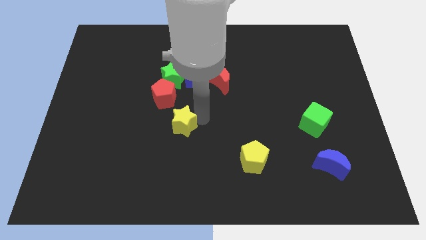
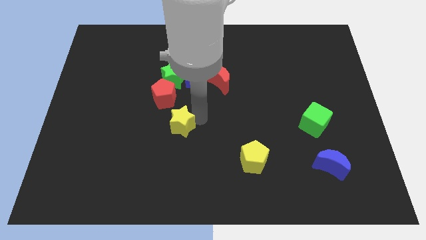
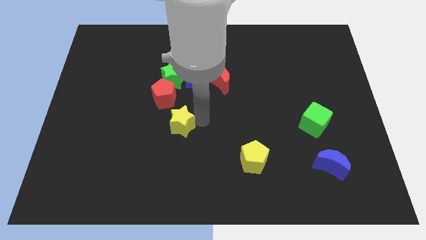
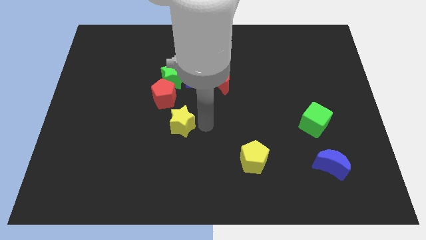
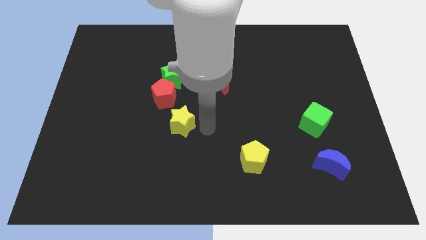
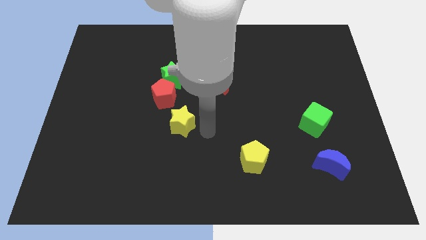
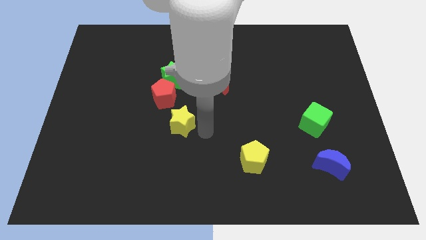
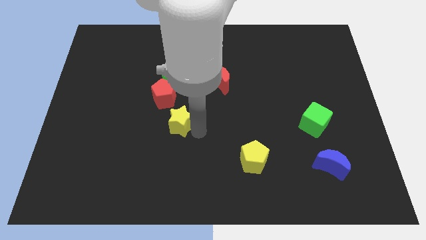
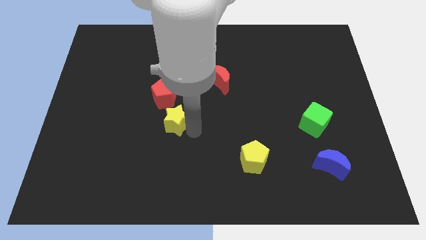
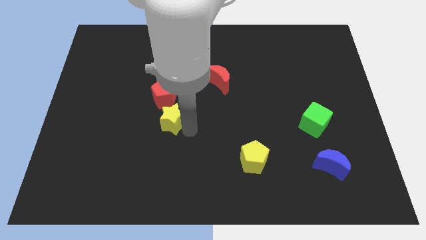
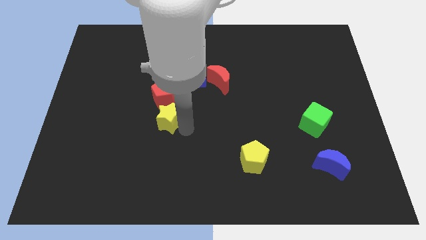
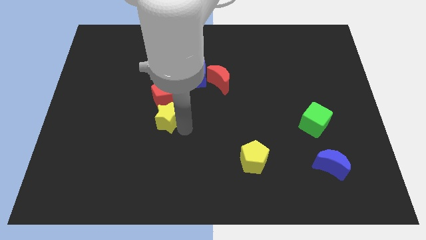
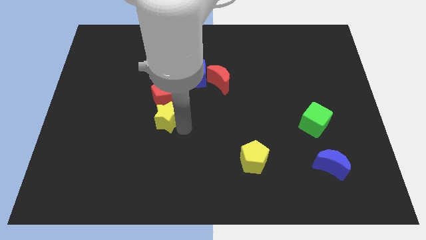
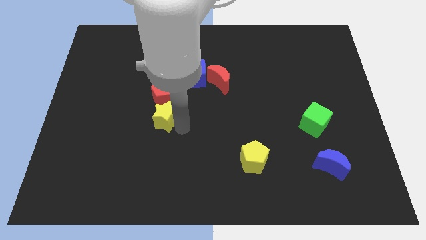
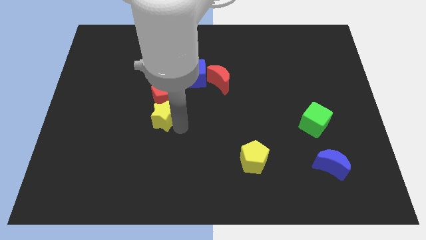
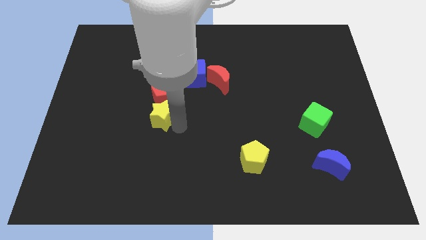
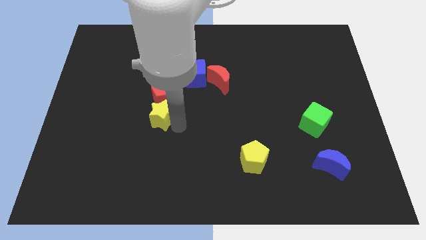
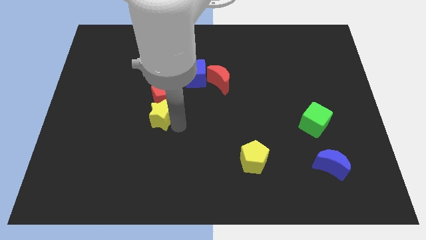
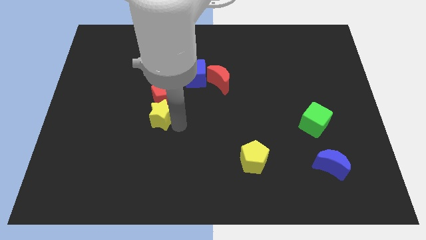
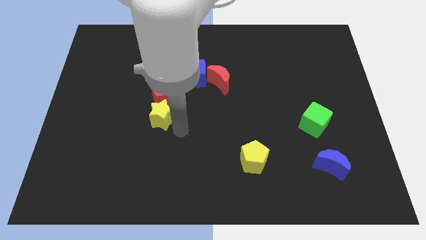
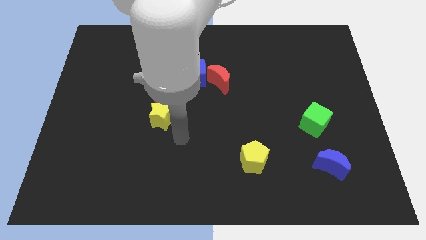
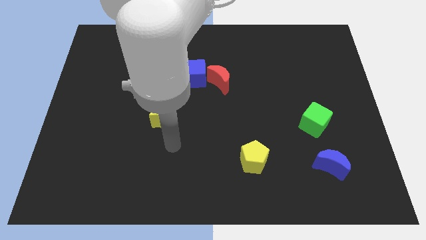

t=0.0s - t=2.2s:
move the yellow star below to the red pentagon

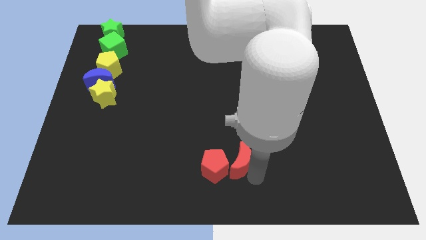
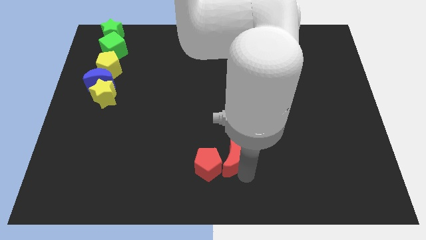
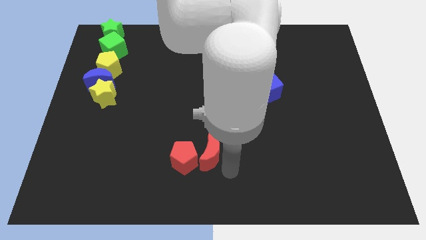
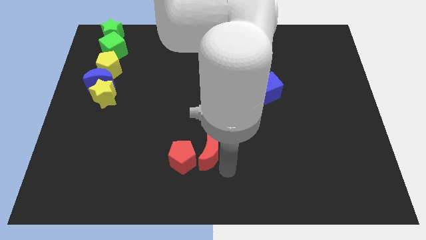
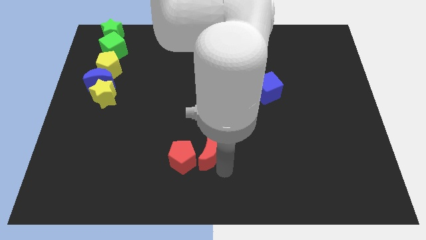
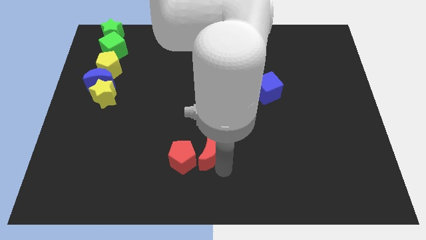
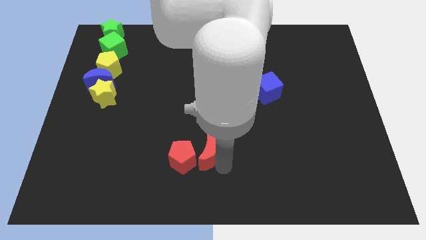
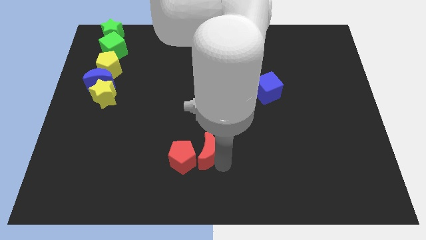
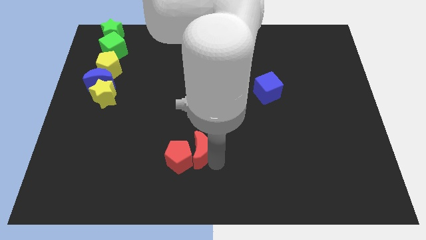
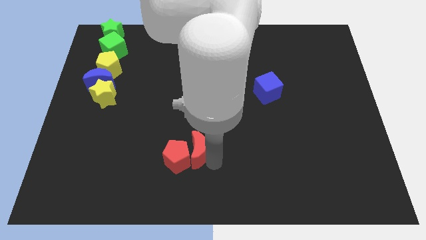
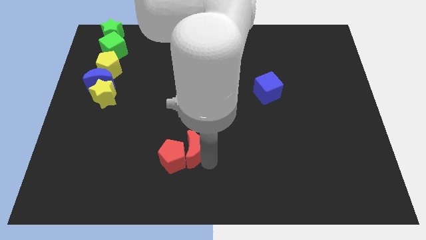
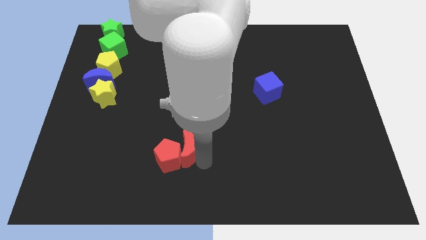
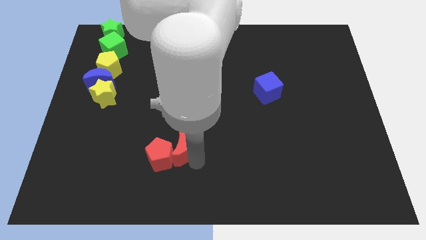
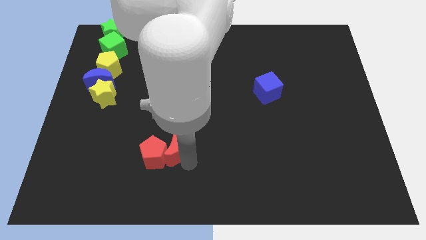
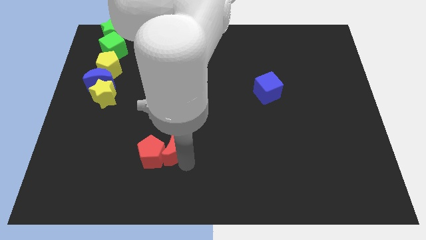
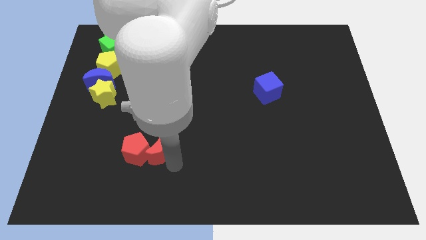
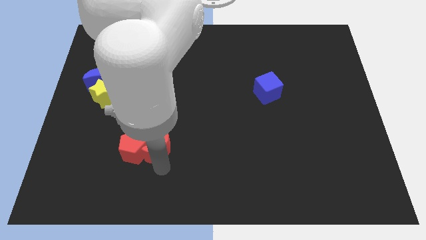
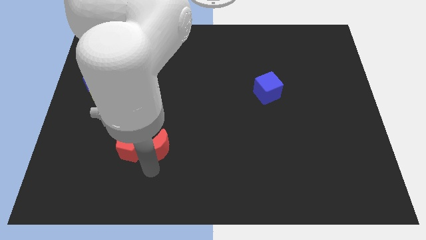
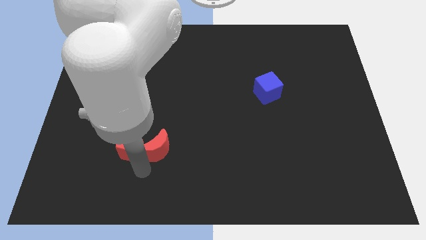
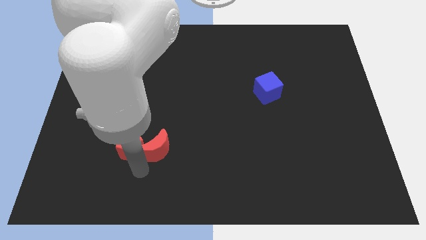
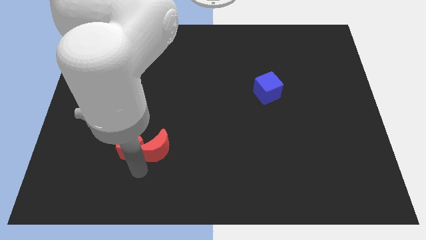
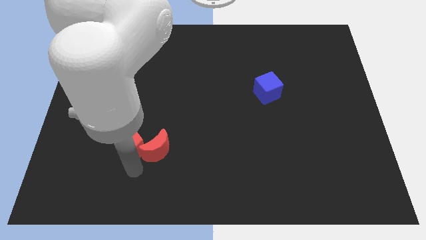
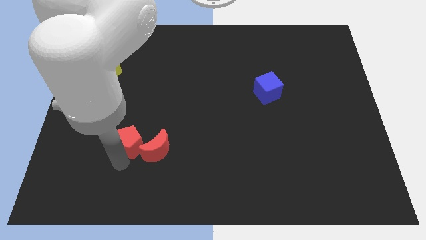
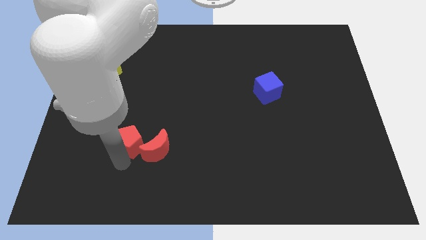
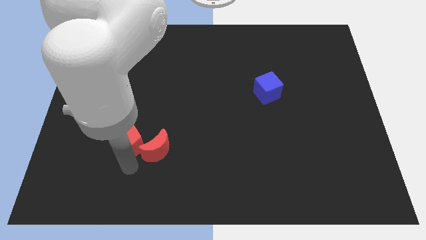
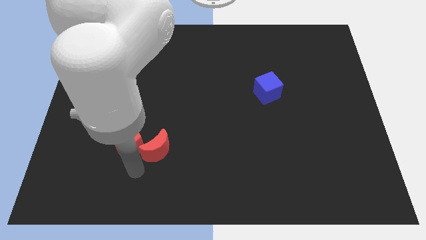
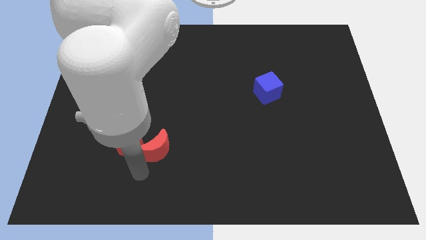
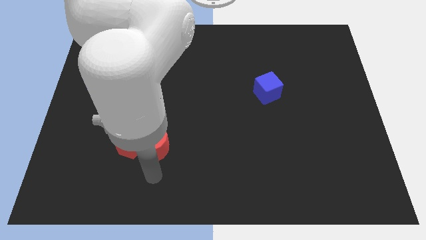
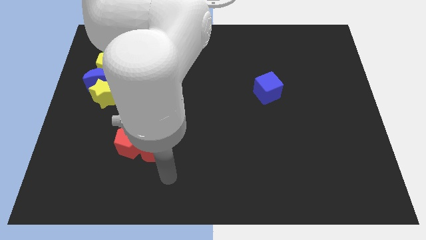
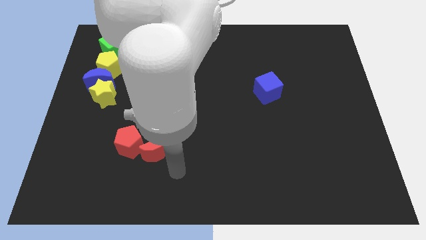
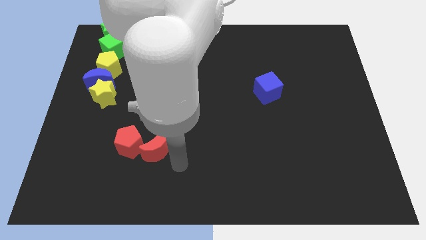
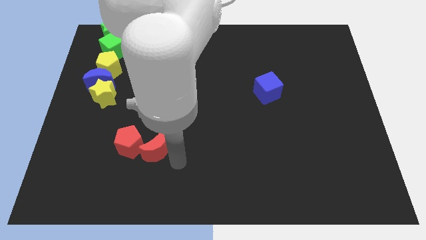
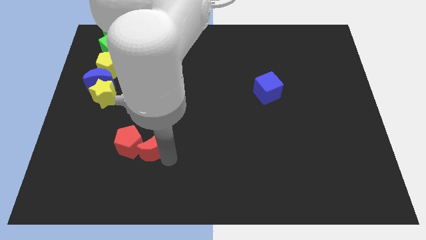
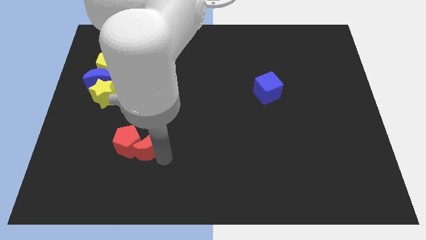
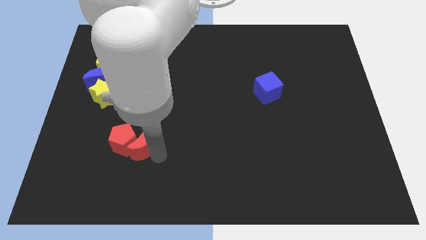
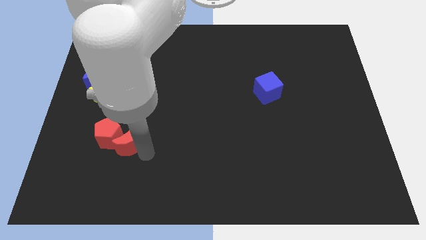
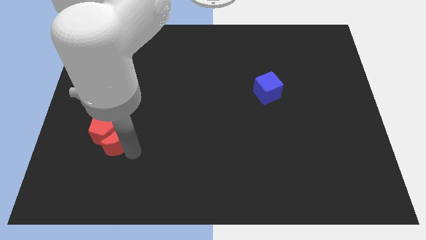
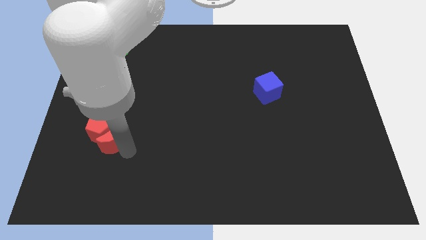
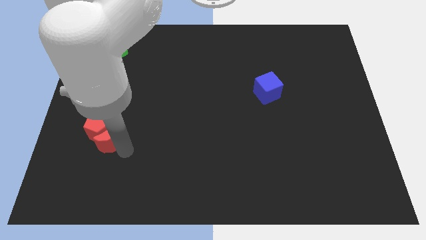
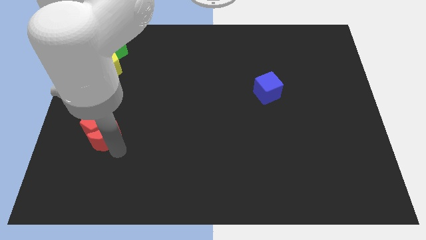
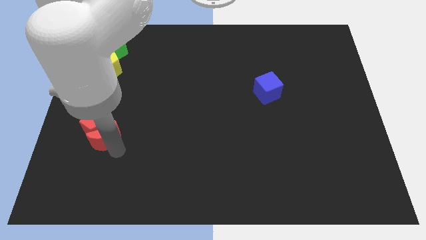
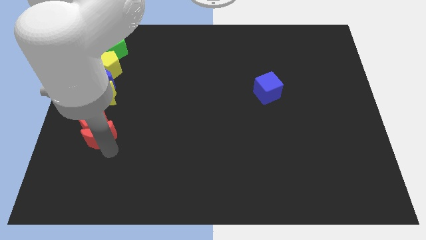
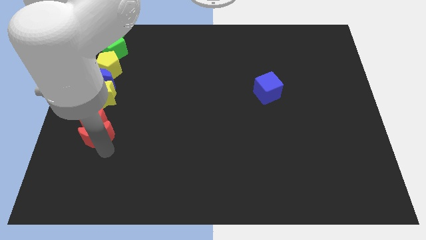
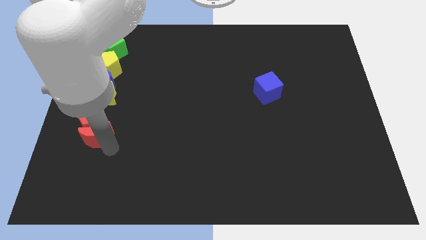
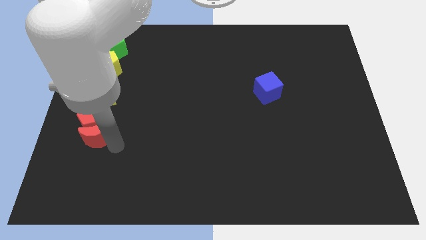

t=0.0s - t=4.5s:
push the red blocks to wards the bottom side of the yellow star

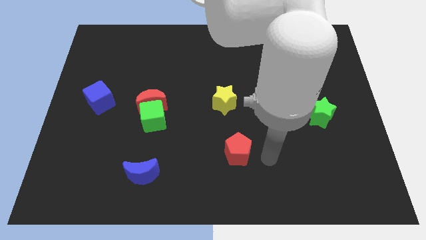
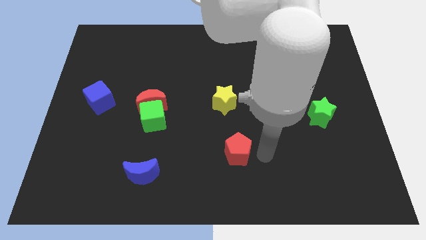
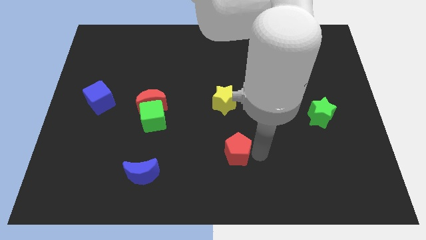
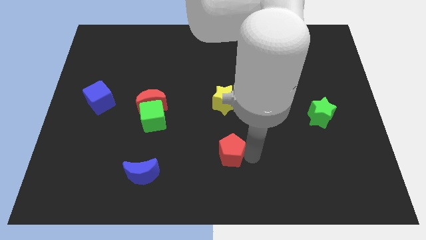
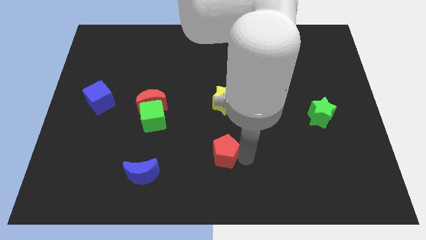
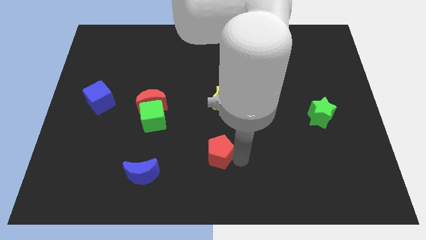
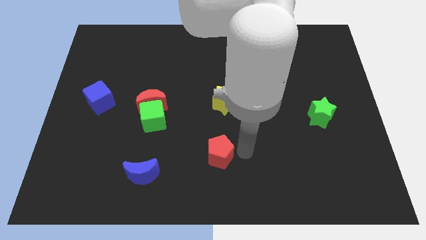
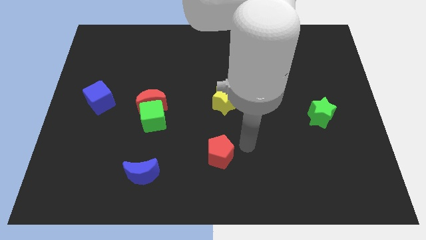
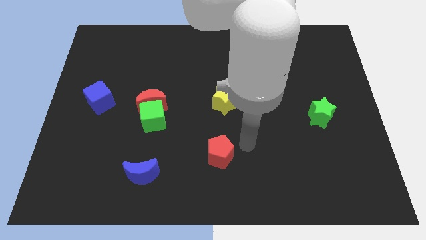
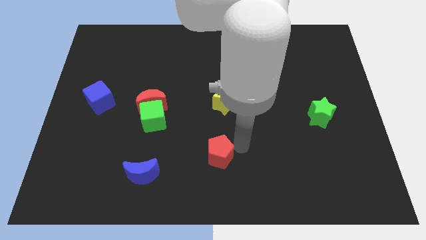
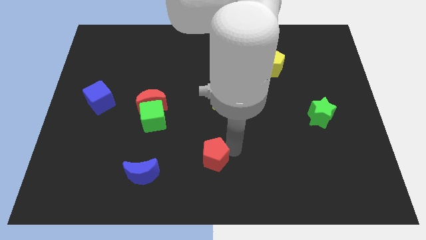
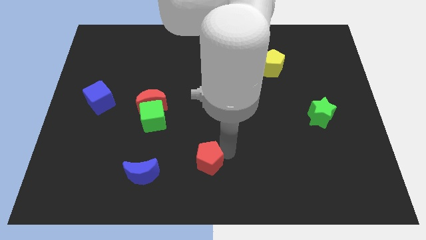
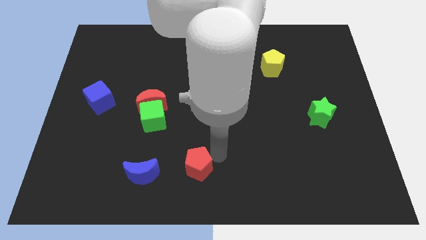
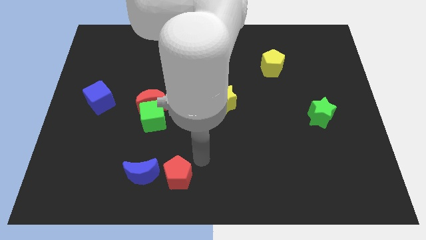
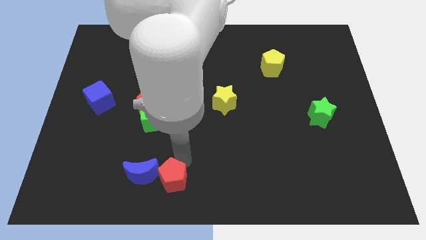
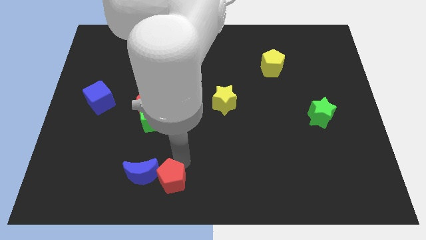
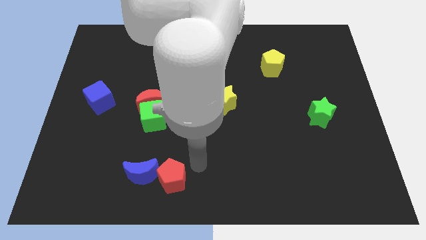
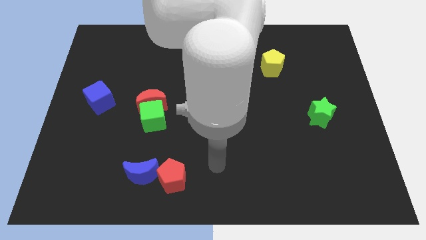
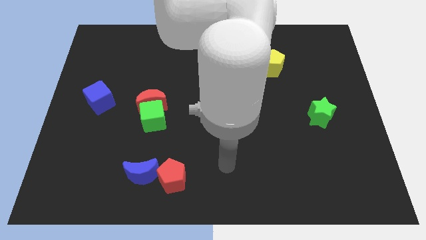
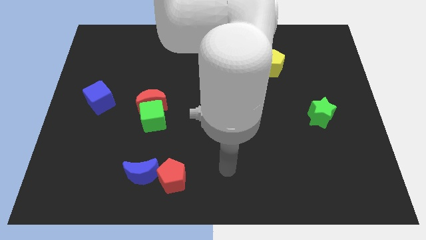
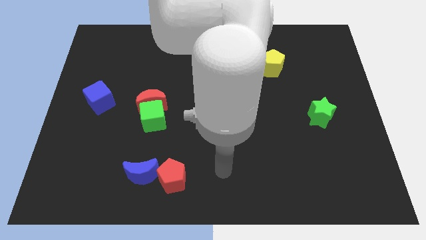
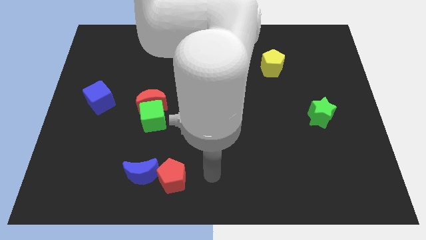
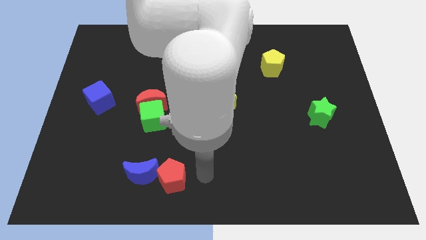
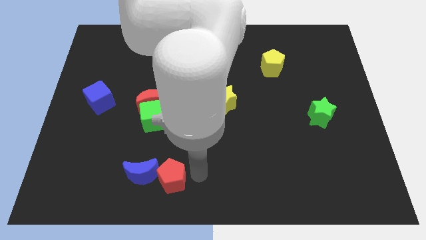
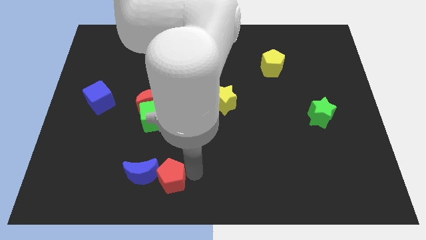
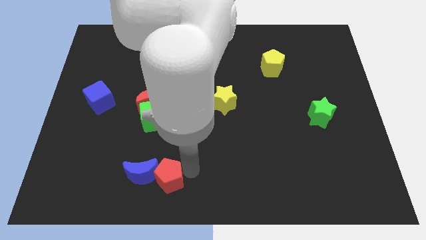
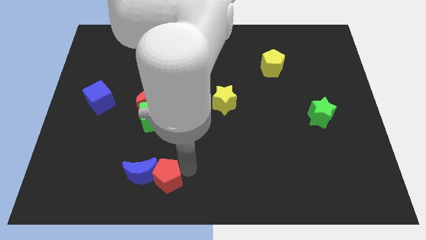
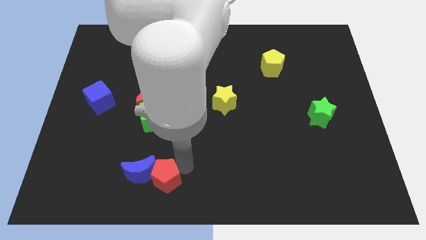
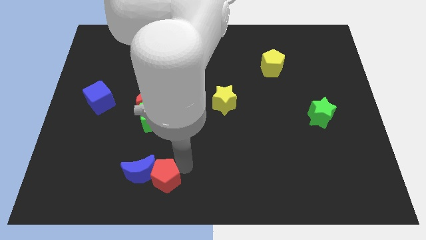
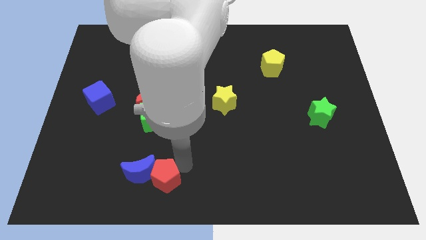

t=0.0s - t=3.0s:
push the red pentagon into the blue moon
